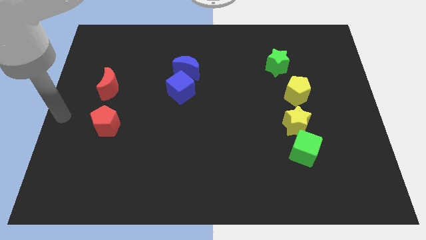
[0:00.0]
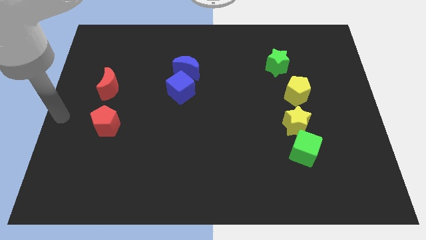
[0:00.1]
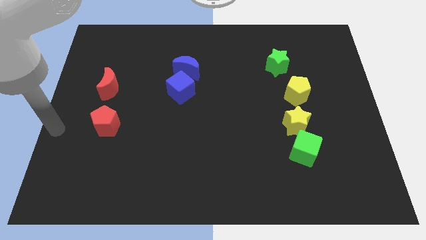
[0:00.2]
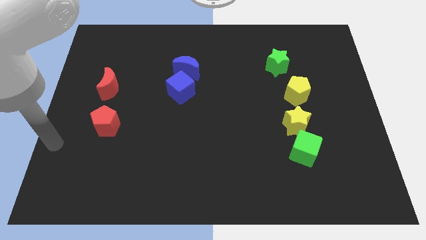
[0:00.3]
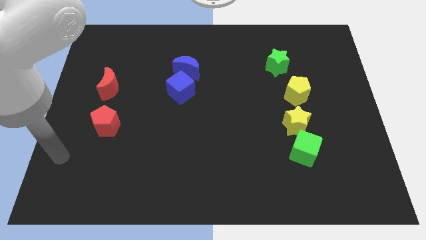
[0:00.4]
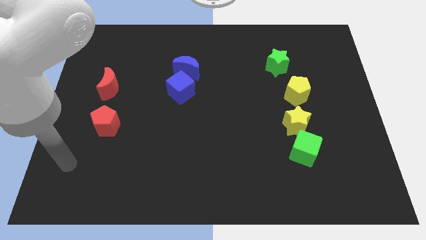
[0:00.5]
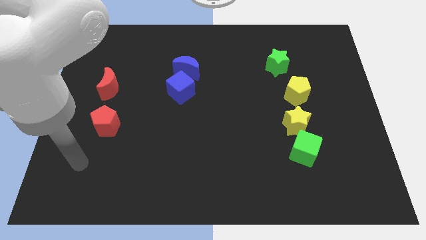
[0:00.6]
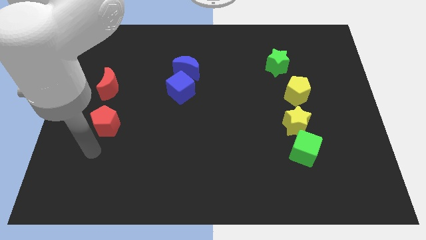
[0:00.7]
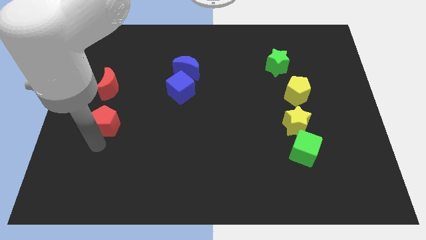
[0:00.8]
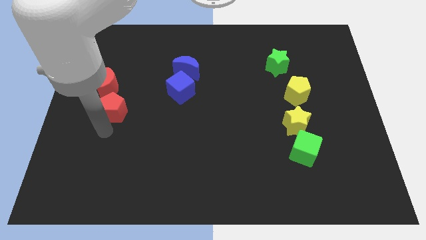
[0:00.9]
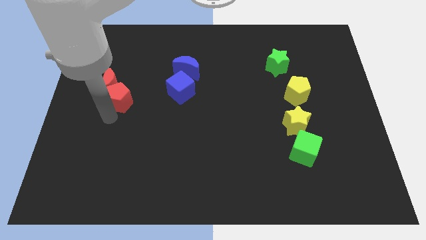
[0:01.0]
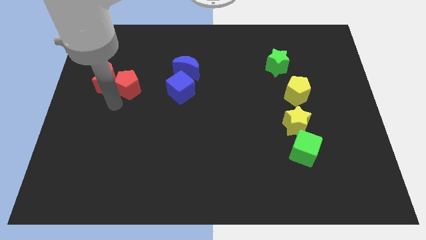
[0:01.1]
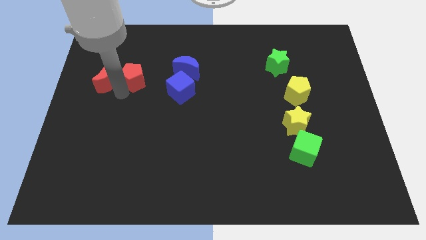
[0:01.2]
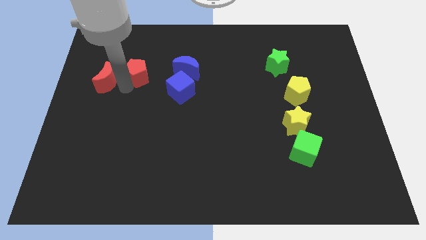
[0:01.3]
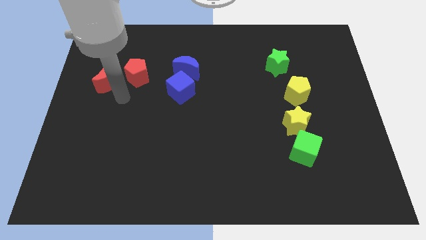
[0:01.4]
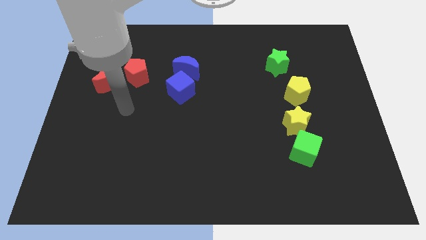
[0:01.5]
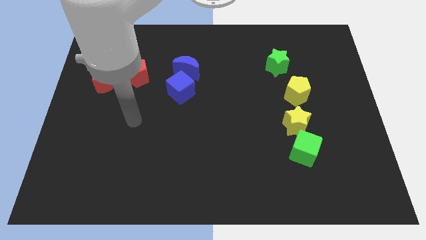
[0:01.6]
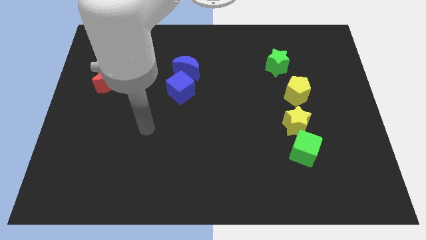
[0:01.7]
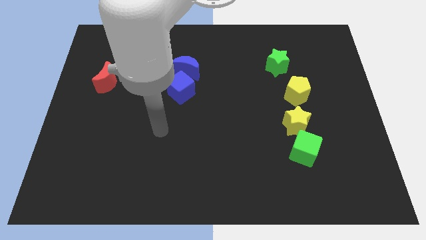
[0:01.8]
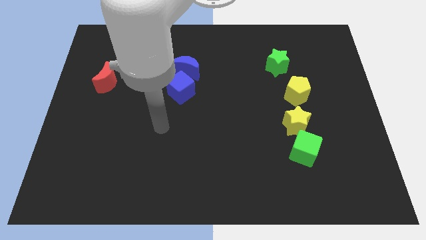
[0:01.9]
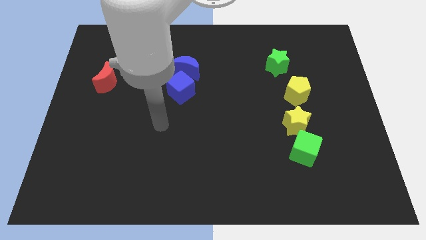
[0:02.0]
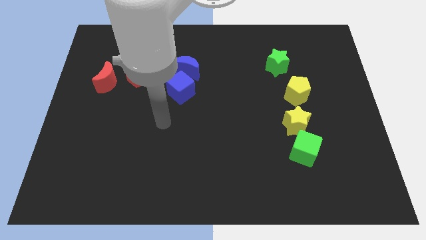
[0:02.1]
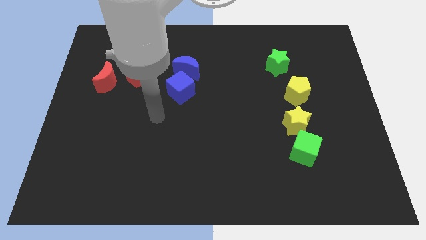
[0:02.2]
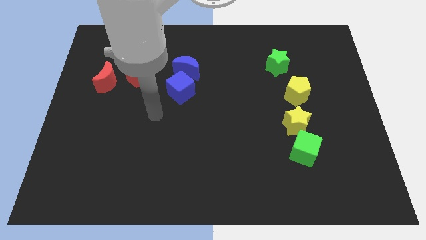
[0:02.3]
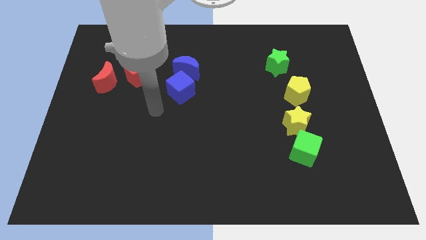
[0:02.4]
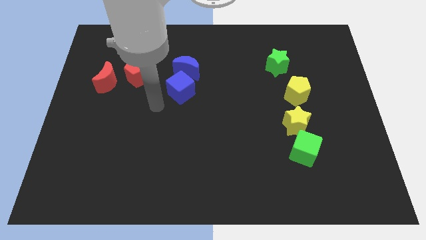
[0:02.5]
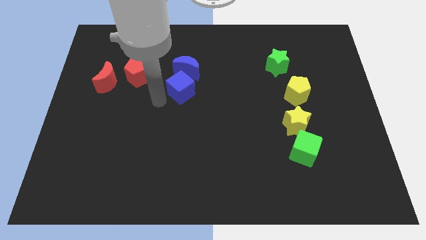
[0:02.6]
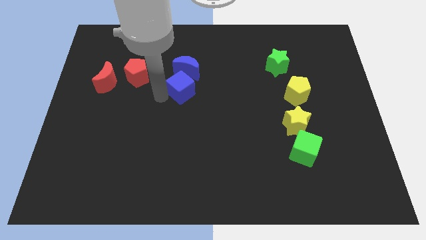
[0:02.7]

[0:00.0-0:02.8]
put the red pentagon to the left of the blue crescent

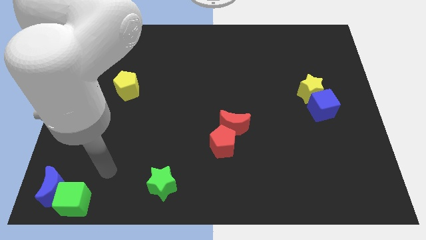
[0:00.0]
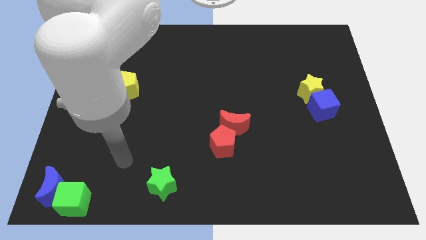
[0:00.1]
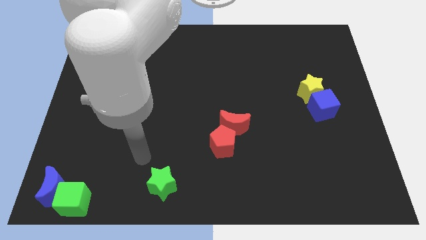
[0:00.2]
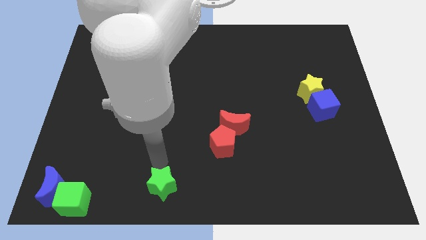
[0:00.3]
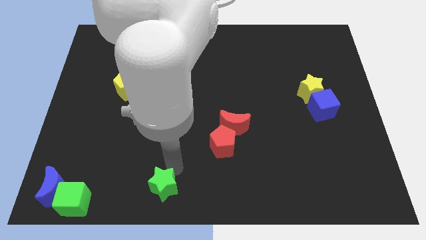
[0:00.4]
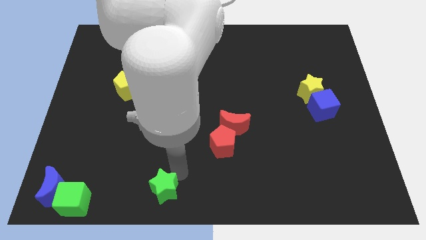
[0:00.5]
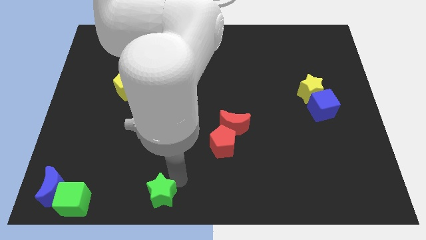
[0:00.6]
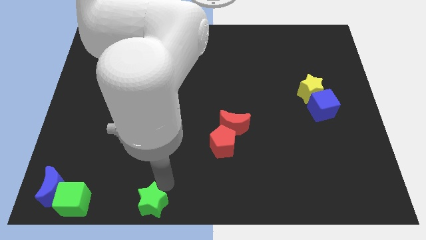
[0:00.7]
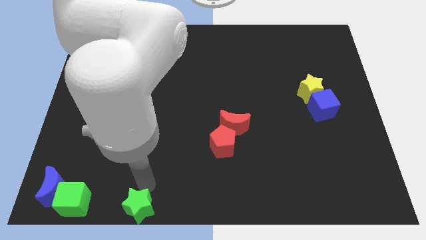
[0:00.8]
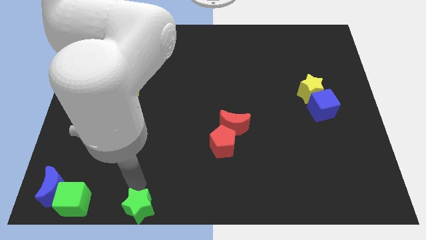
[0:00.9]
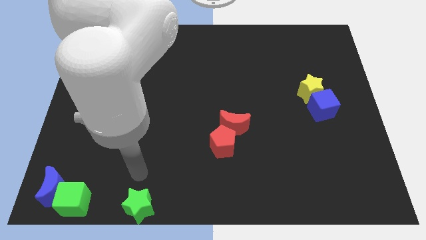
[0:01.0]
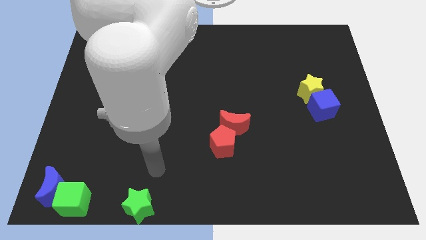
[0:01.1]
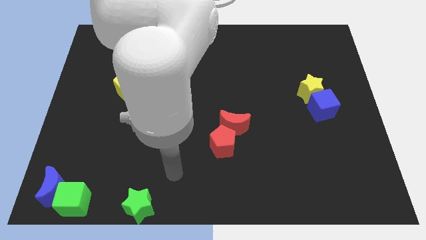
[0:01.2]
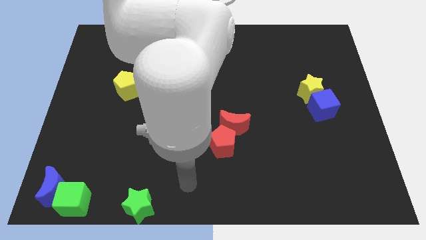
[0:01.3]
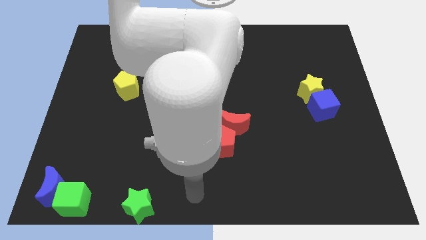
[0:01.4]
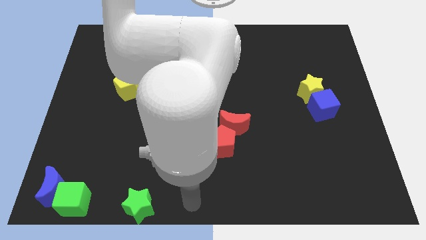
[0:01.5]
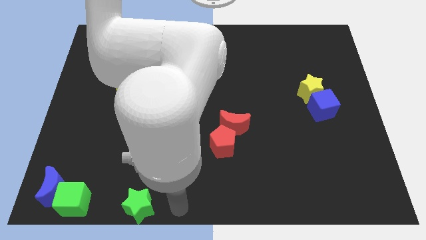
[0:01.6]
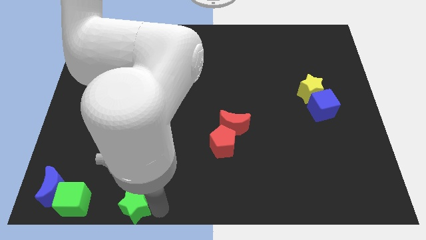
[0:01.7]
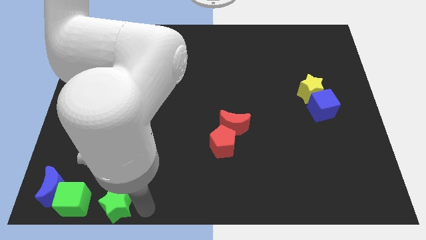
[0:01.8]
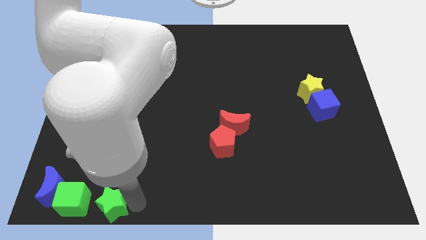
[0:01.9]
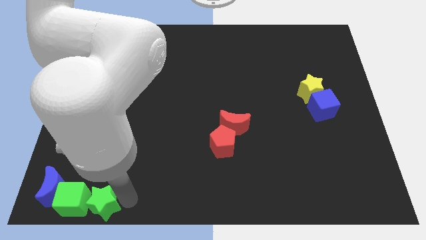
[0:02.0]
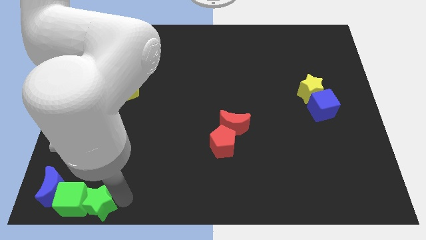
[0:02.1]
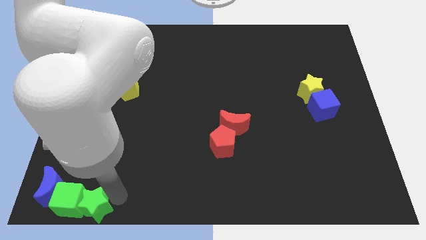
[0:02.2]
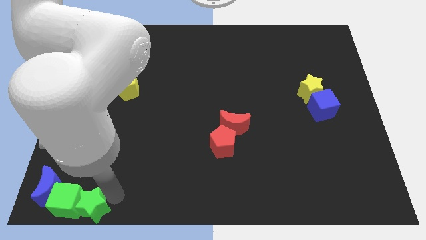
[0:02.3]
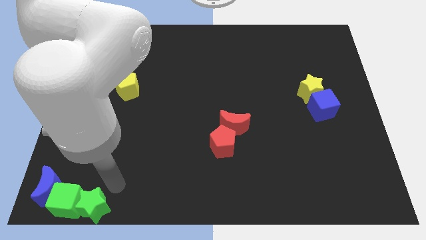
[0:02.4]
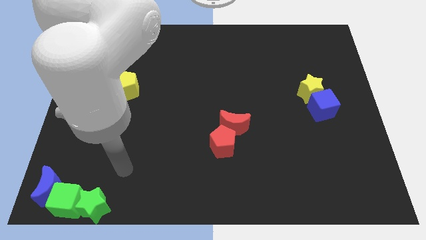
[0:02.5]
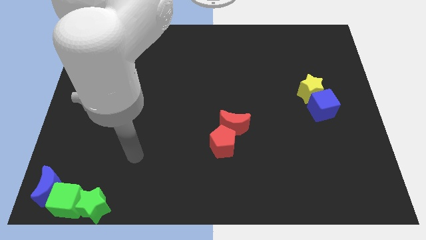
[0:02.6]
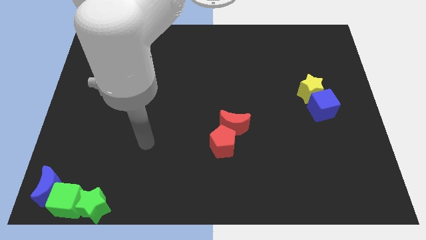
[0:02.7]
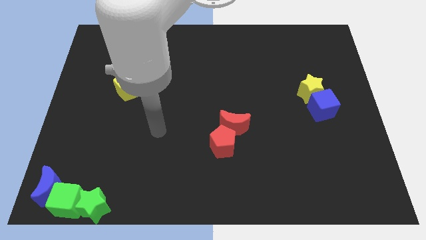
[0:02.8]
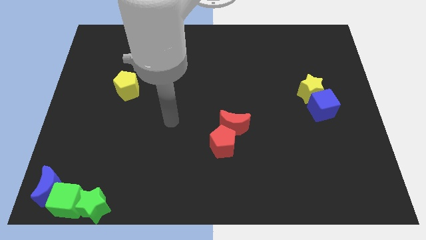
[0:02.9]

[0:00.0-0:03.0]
push the green star into the green cube

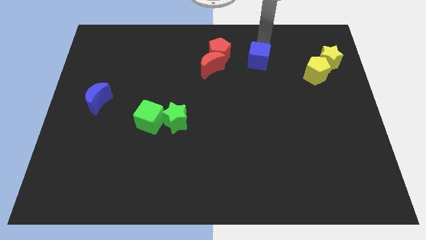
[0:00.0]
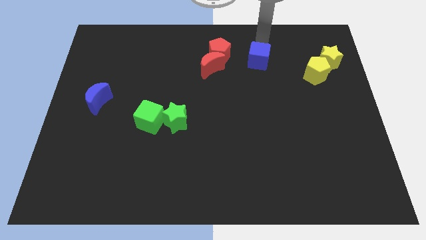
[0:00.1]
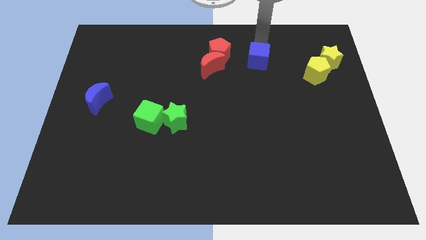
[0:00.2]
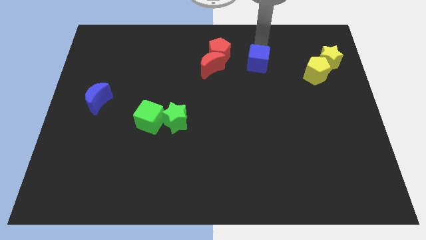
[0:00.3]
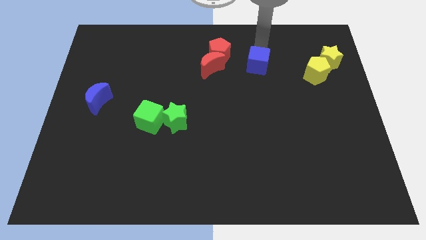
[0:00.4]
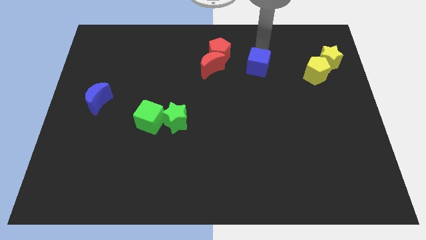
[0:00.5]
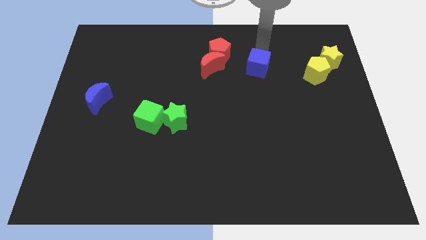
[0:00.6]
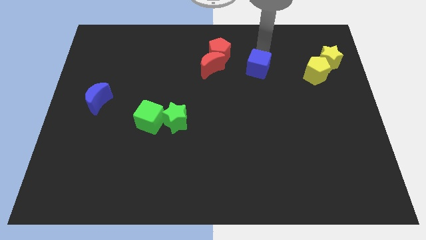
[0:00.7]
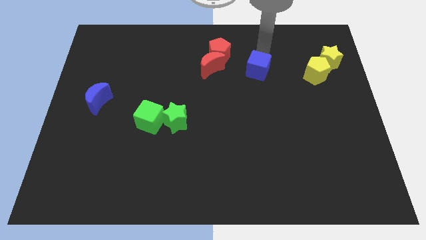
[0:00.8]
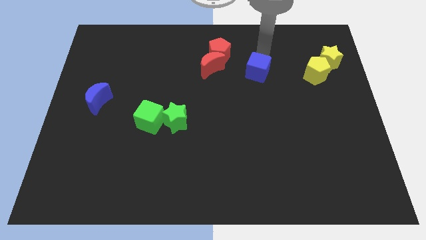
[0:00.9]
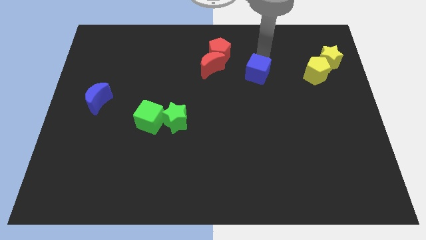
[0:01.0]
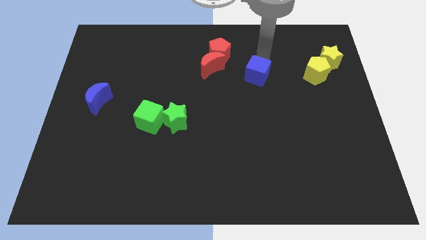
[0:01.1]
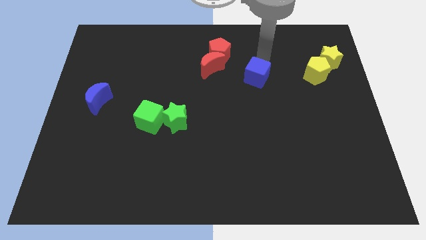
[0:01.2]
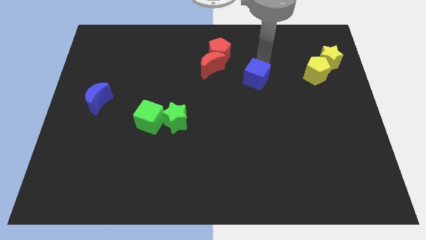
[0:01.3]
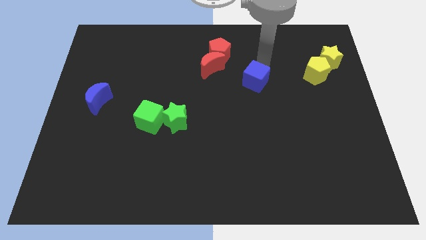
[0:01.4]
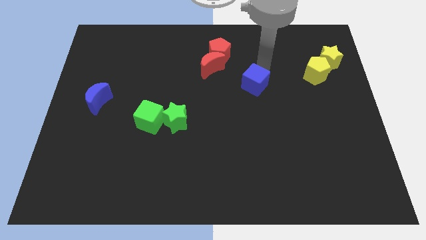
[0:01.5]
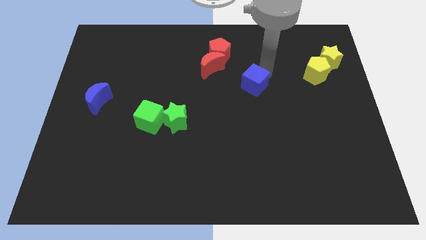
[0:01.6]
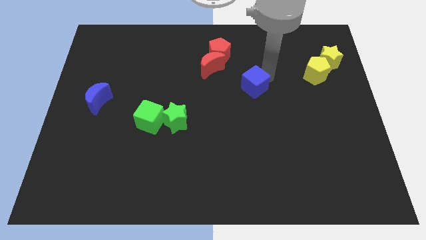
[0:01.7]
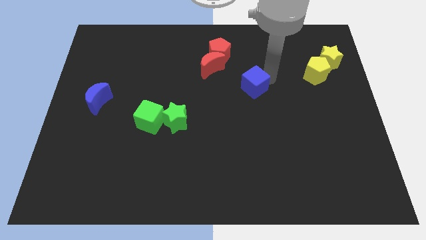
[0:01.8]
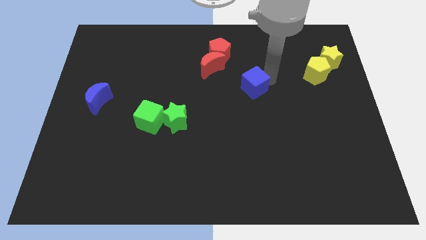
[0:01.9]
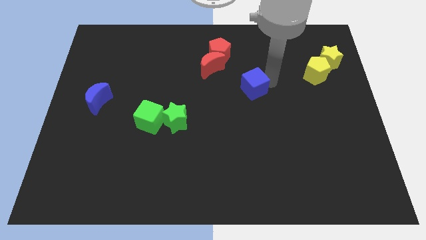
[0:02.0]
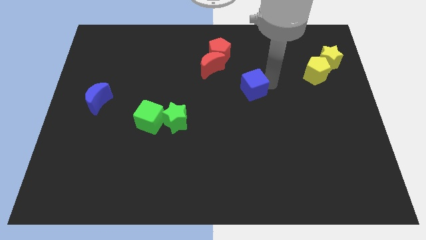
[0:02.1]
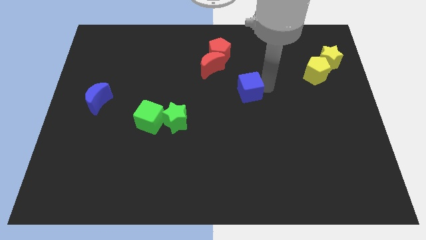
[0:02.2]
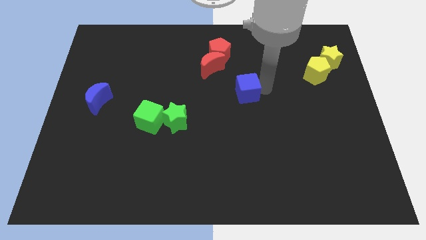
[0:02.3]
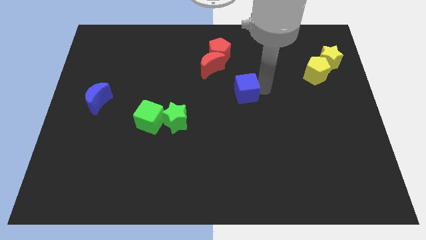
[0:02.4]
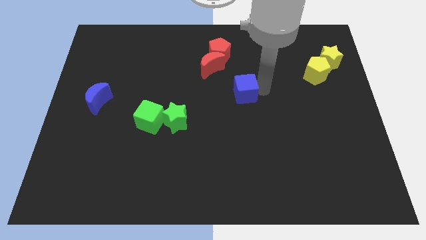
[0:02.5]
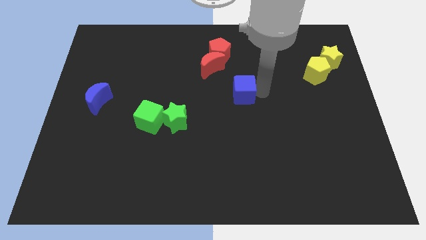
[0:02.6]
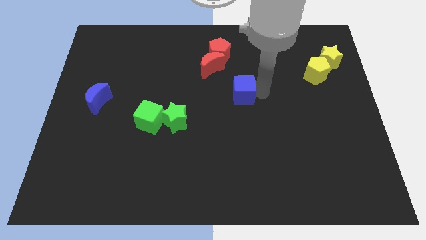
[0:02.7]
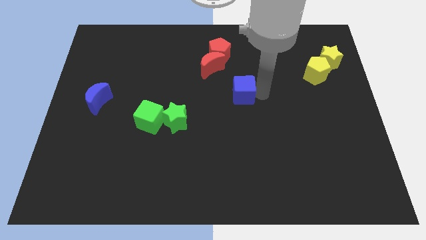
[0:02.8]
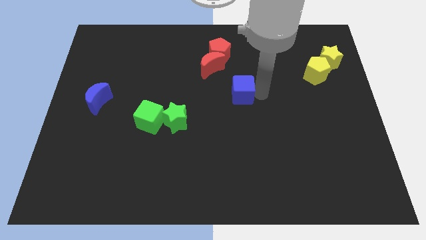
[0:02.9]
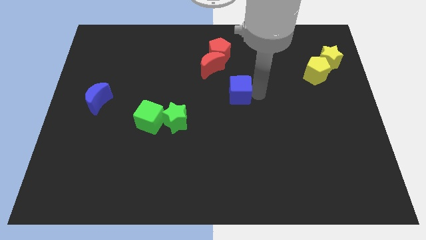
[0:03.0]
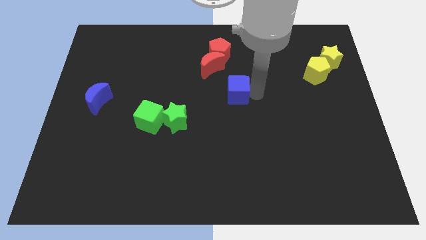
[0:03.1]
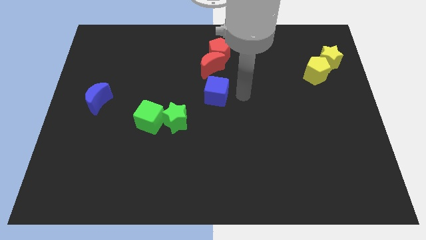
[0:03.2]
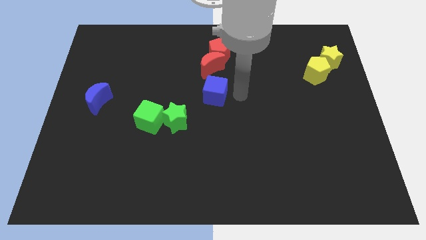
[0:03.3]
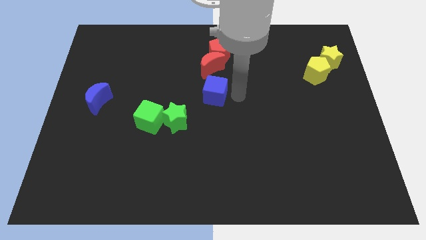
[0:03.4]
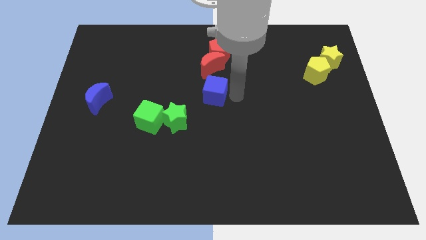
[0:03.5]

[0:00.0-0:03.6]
put the blue cube below the group of red blocks
